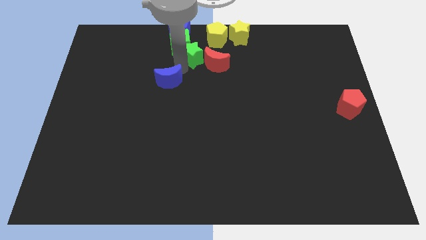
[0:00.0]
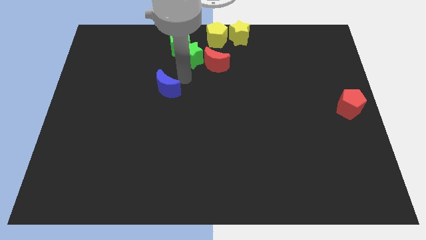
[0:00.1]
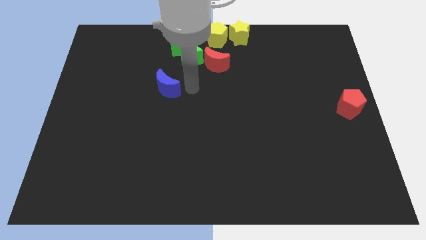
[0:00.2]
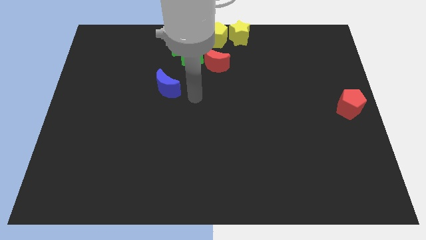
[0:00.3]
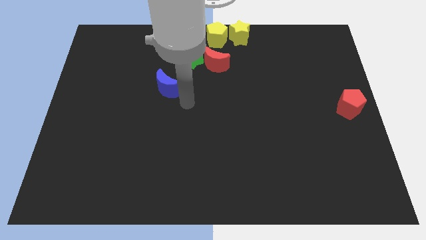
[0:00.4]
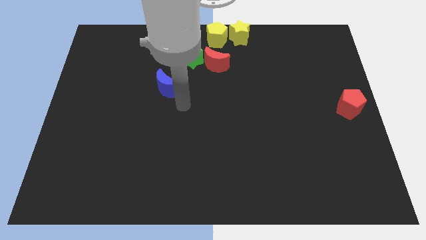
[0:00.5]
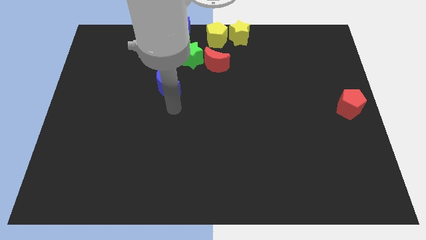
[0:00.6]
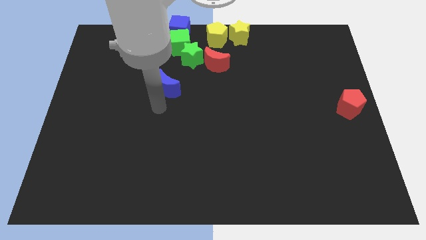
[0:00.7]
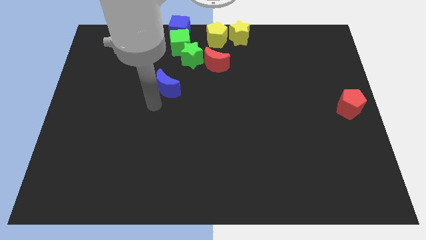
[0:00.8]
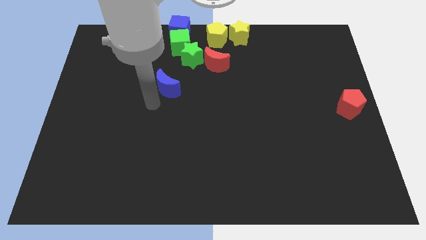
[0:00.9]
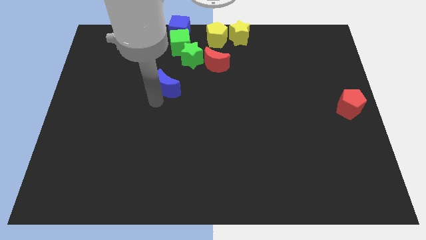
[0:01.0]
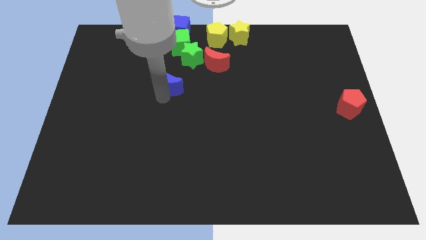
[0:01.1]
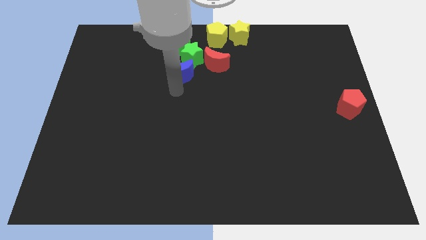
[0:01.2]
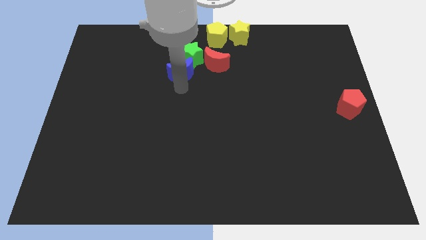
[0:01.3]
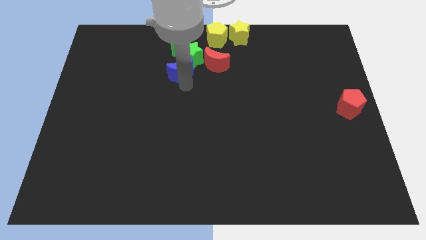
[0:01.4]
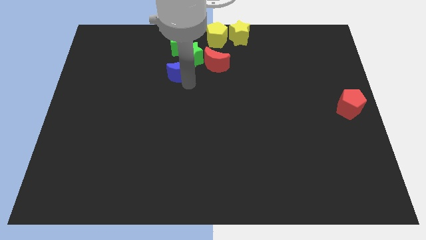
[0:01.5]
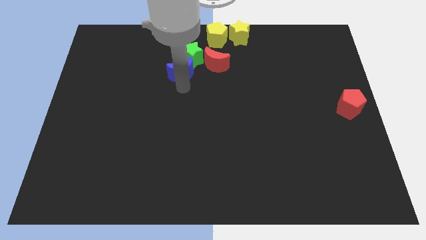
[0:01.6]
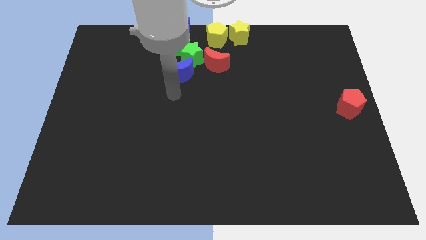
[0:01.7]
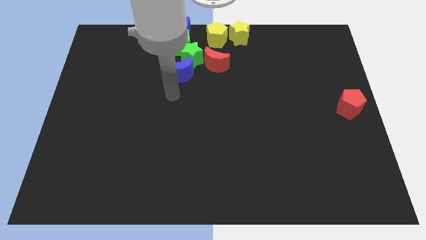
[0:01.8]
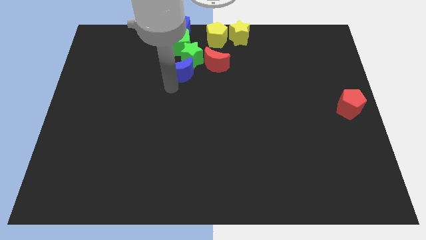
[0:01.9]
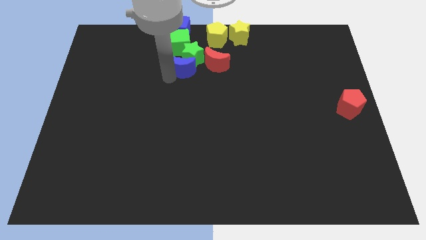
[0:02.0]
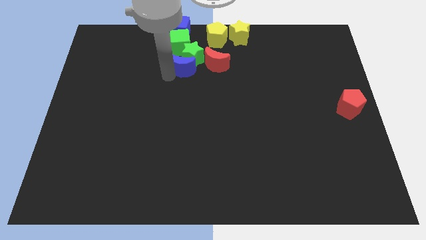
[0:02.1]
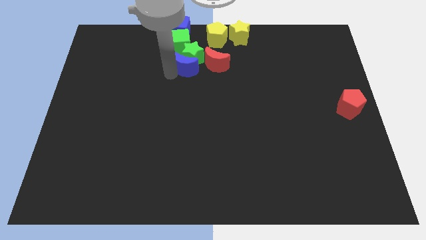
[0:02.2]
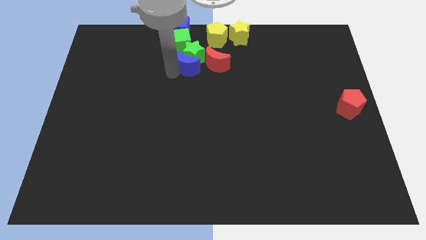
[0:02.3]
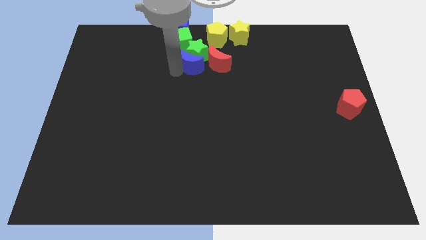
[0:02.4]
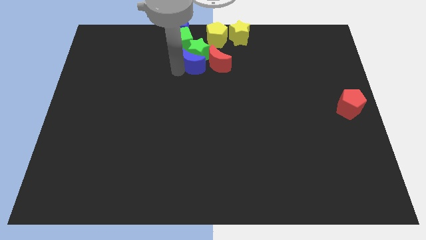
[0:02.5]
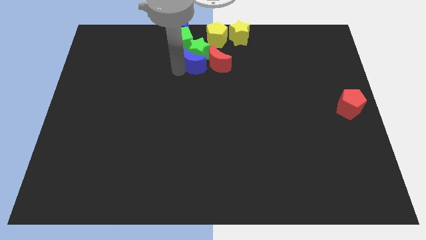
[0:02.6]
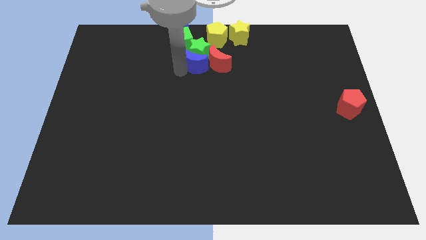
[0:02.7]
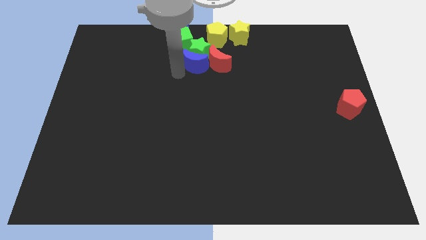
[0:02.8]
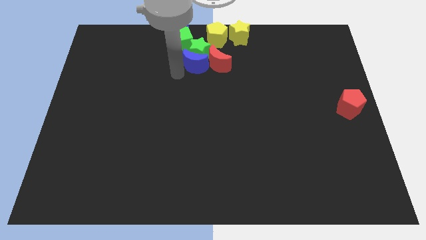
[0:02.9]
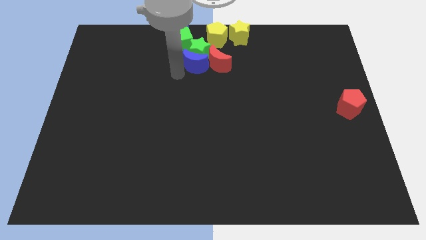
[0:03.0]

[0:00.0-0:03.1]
move the blue moon into the red moon

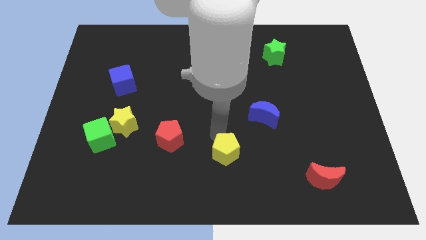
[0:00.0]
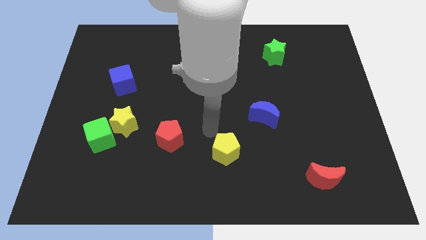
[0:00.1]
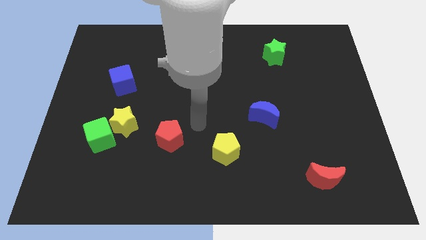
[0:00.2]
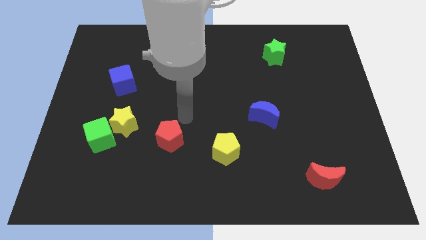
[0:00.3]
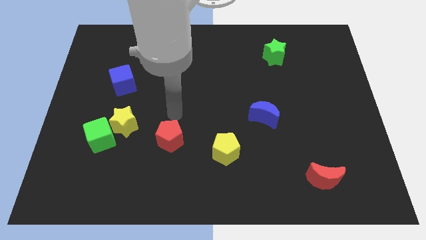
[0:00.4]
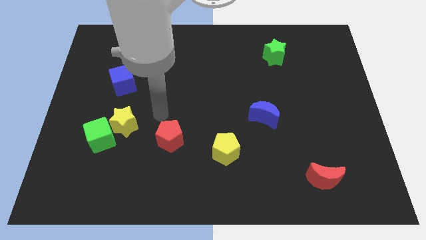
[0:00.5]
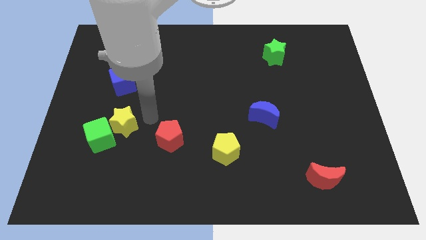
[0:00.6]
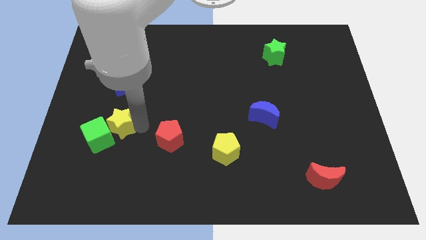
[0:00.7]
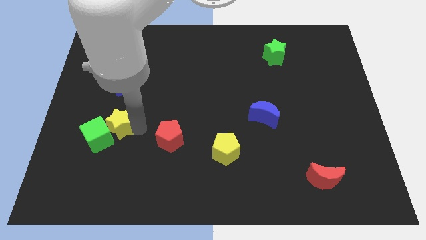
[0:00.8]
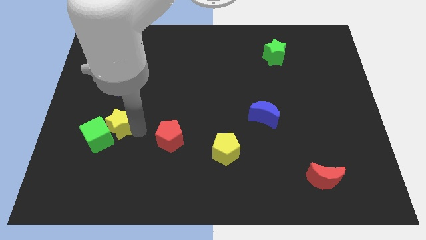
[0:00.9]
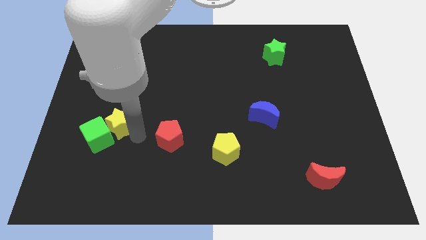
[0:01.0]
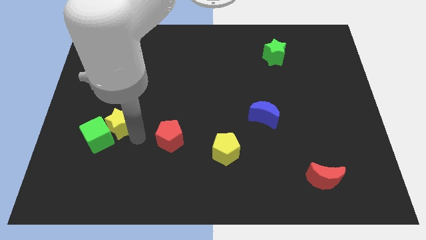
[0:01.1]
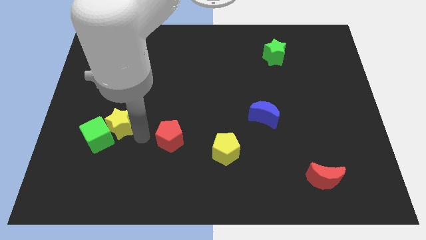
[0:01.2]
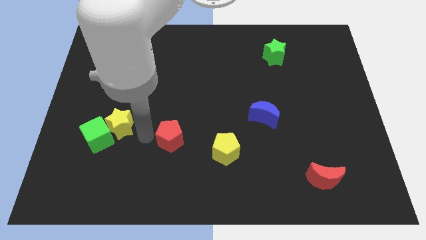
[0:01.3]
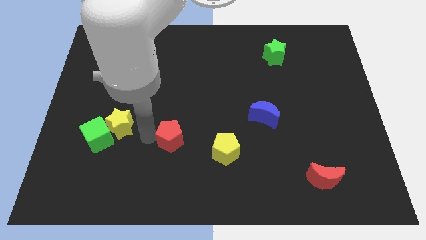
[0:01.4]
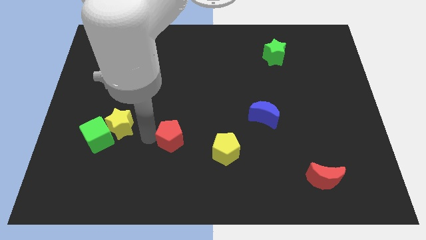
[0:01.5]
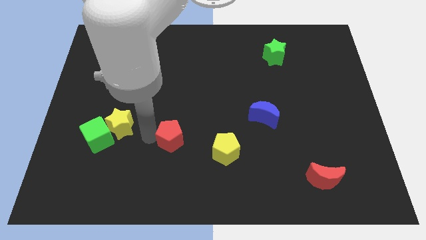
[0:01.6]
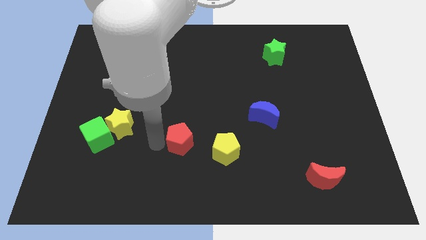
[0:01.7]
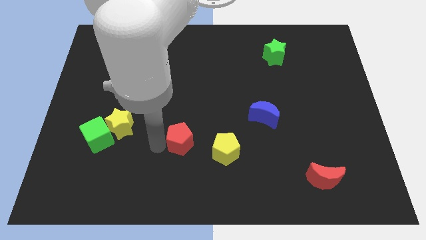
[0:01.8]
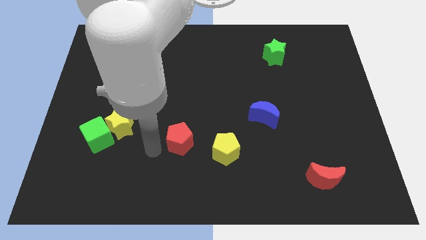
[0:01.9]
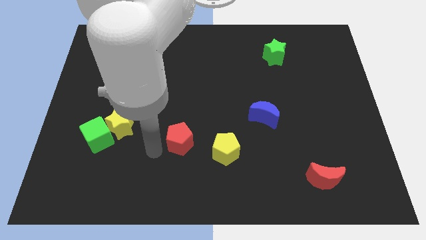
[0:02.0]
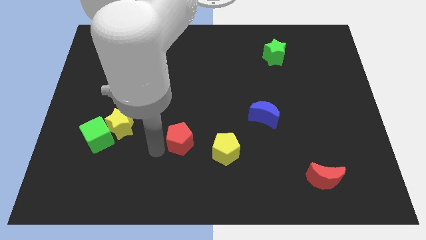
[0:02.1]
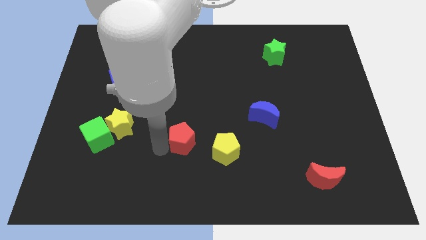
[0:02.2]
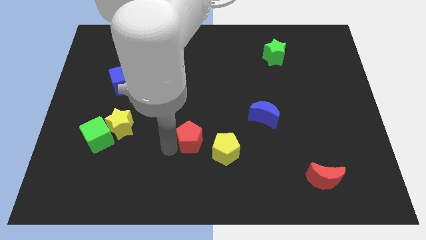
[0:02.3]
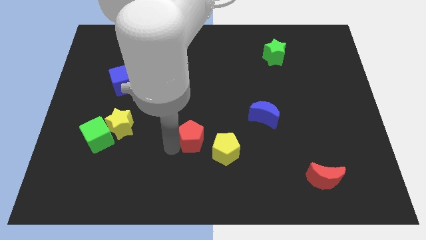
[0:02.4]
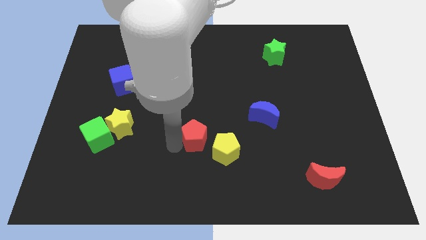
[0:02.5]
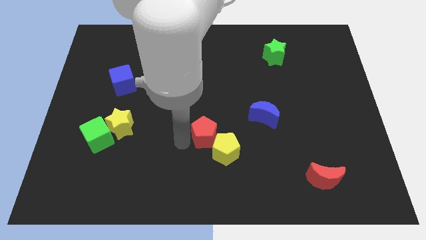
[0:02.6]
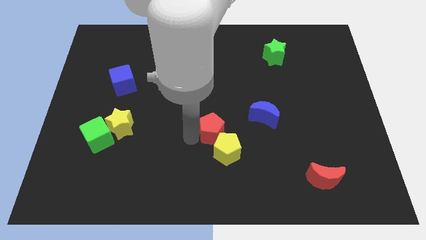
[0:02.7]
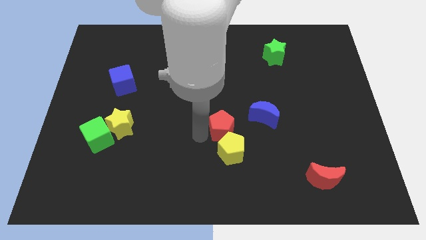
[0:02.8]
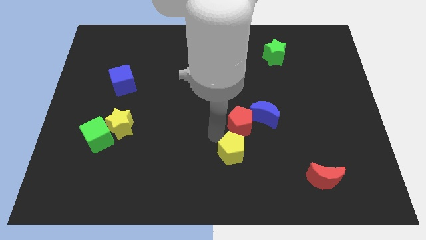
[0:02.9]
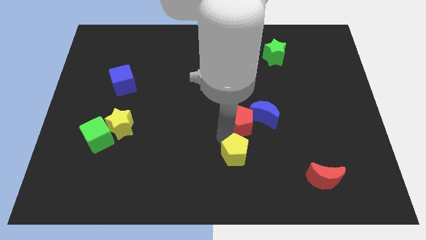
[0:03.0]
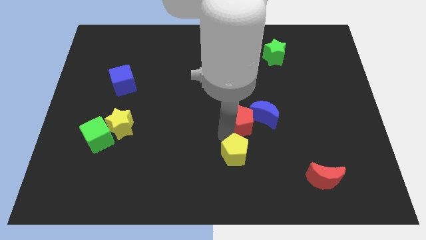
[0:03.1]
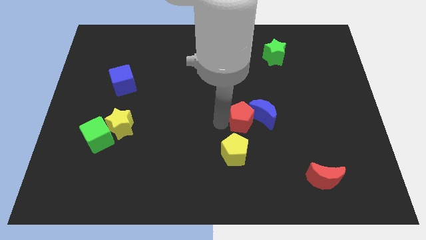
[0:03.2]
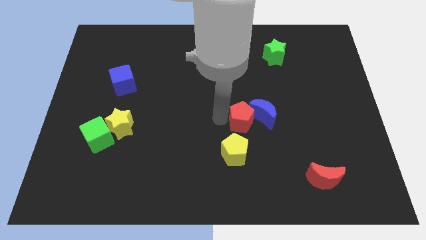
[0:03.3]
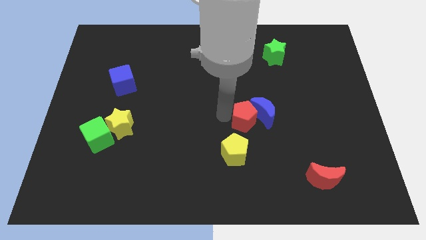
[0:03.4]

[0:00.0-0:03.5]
place the red pentagon left to the blue moon

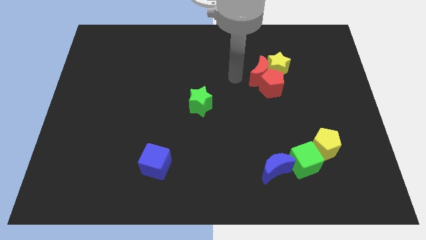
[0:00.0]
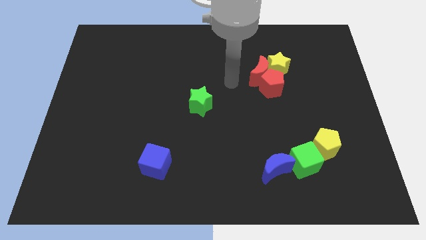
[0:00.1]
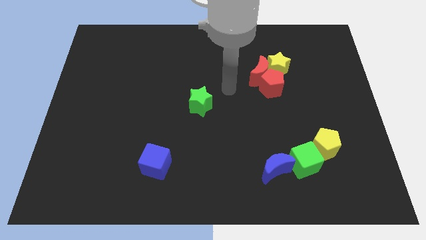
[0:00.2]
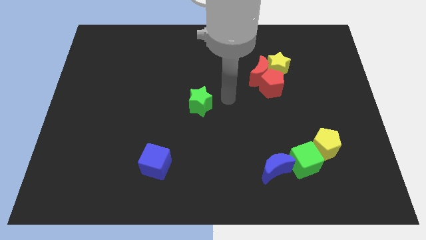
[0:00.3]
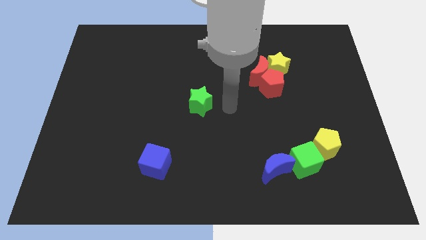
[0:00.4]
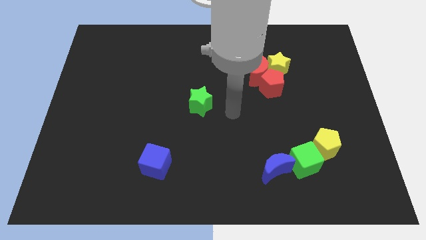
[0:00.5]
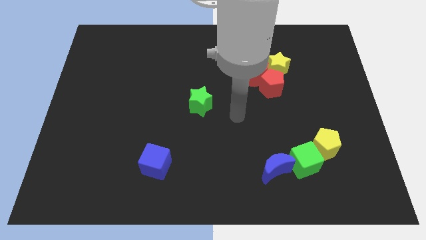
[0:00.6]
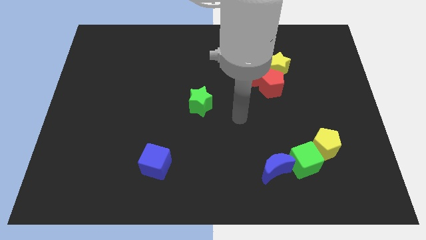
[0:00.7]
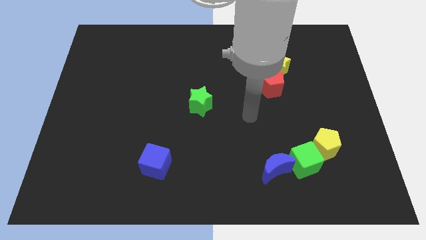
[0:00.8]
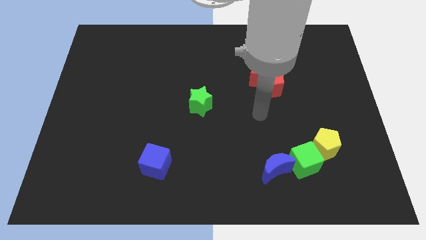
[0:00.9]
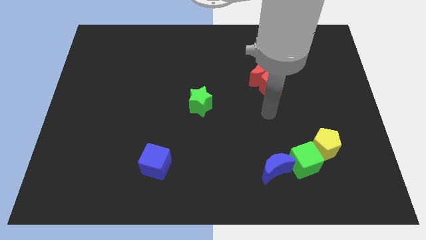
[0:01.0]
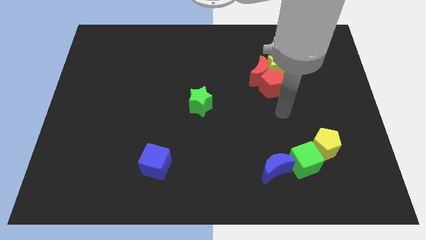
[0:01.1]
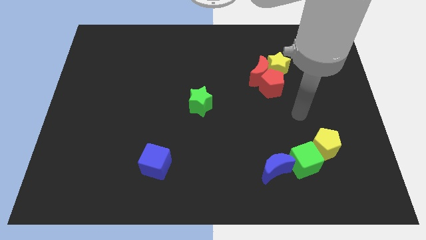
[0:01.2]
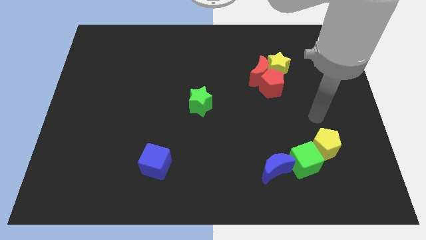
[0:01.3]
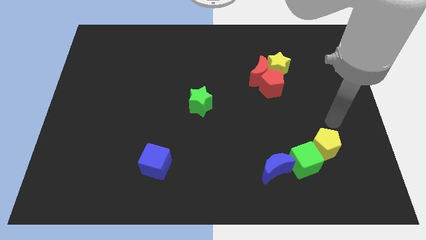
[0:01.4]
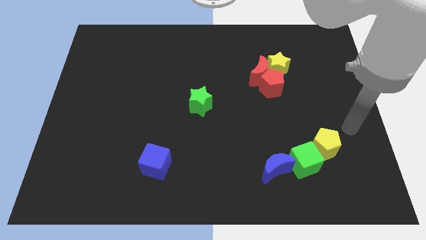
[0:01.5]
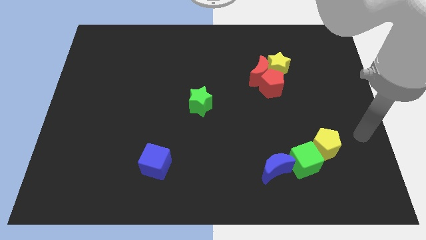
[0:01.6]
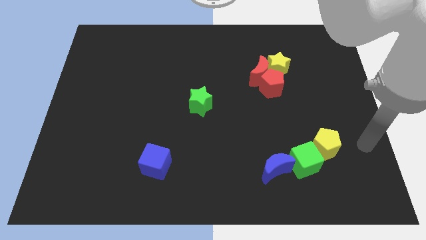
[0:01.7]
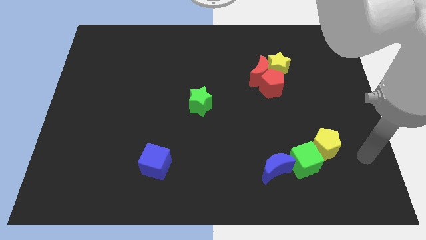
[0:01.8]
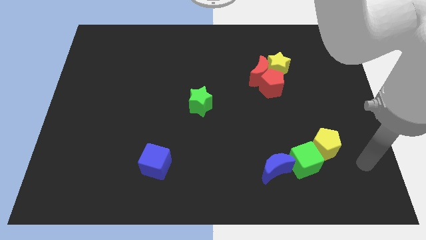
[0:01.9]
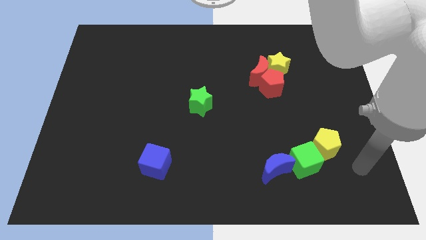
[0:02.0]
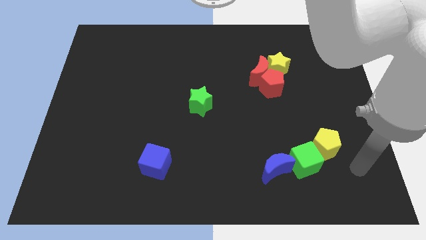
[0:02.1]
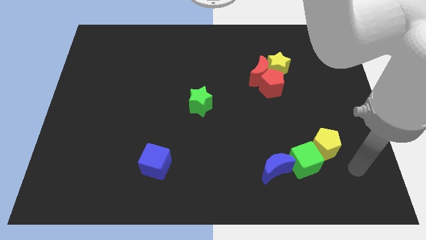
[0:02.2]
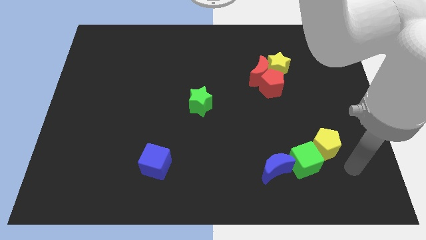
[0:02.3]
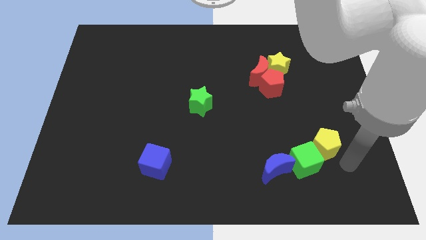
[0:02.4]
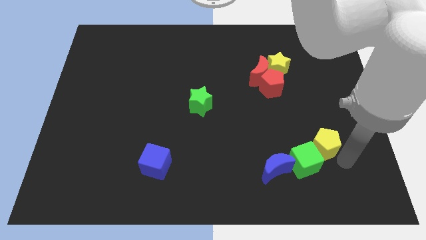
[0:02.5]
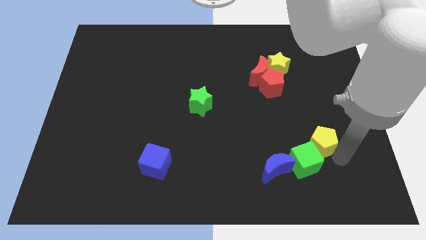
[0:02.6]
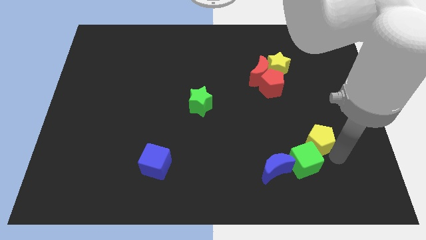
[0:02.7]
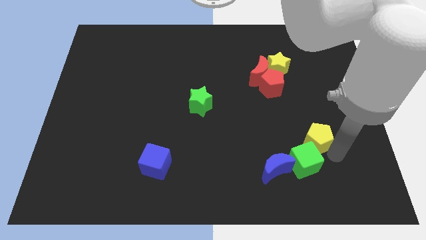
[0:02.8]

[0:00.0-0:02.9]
place the arm down to the yellow pentagon
